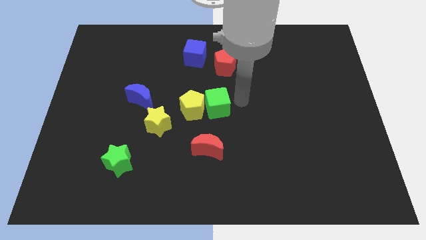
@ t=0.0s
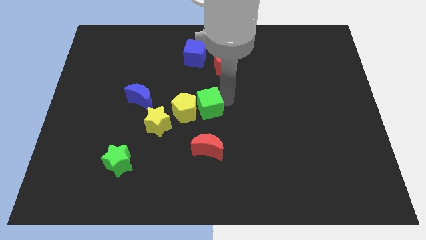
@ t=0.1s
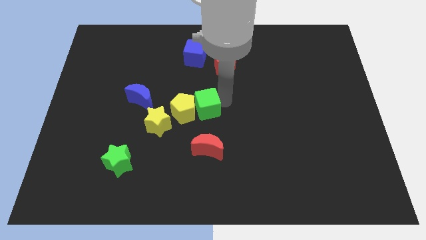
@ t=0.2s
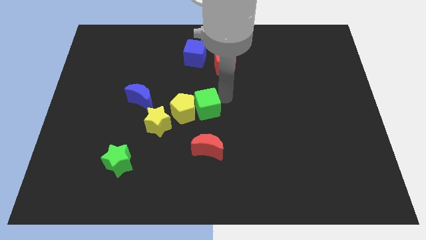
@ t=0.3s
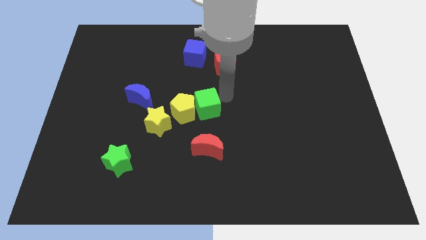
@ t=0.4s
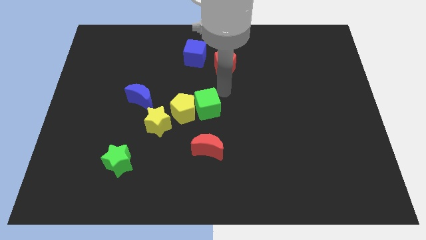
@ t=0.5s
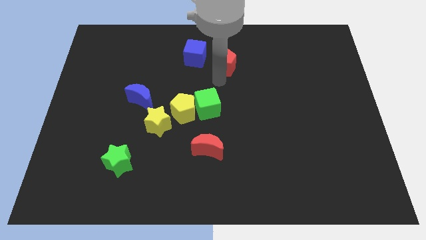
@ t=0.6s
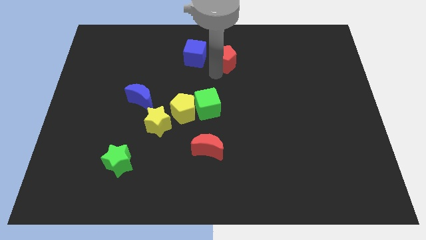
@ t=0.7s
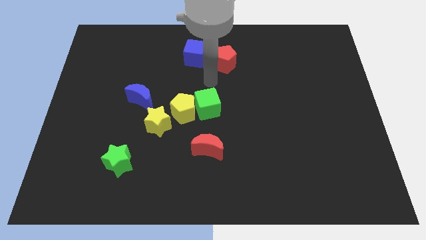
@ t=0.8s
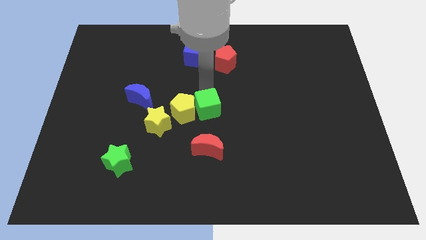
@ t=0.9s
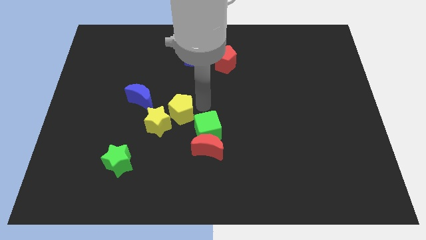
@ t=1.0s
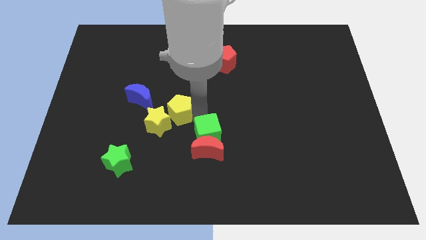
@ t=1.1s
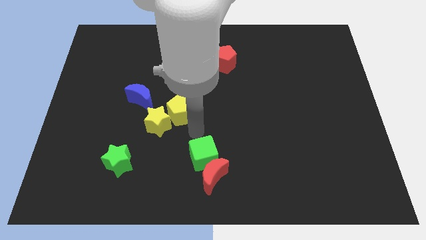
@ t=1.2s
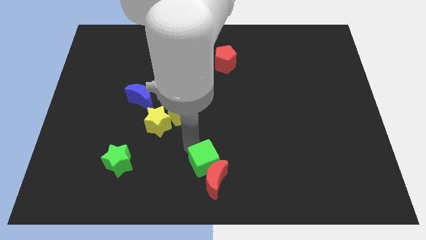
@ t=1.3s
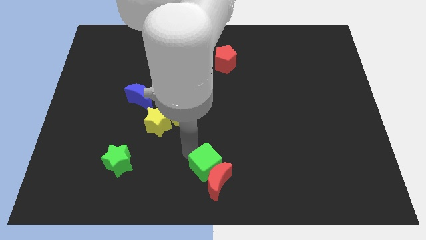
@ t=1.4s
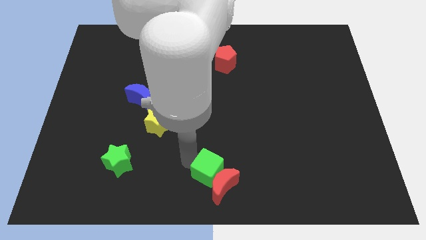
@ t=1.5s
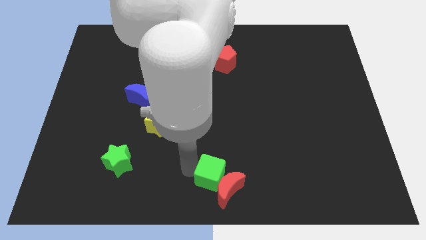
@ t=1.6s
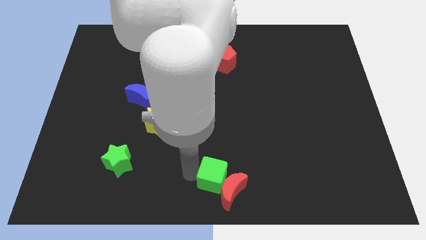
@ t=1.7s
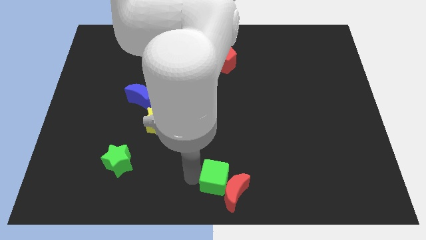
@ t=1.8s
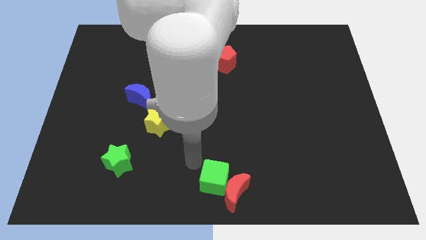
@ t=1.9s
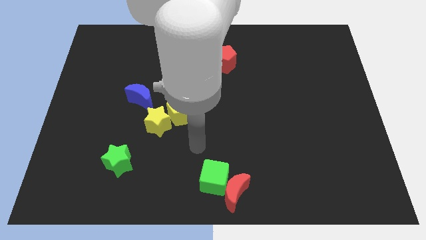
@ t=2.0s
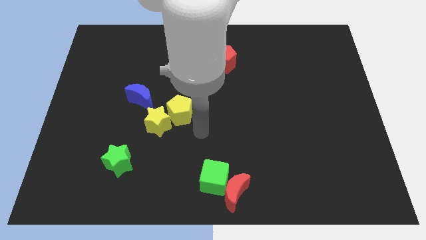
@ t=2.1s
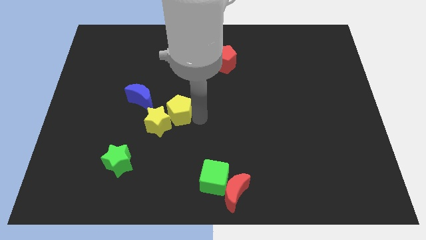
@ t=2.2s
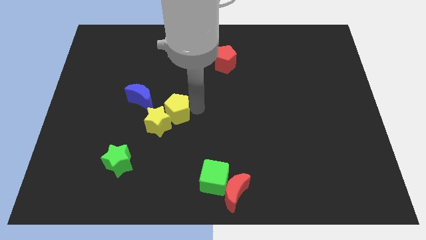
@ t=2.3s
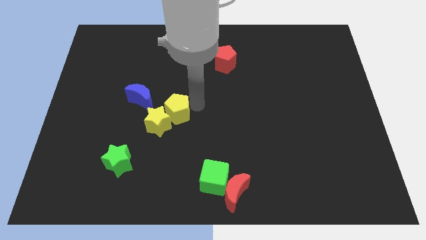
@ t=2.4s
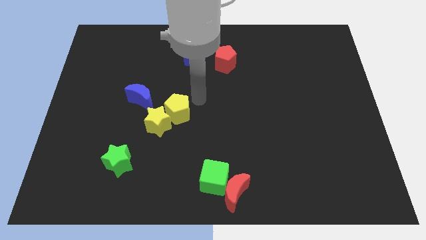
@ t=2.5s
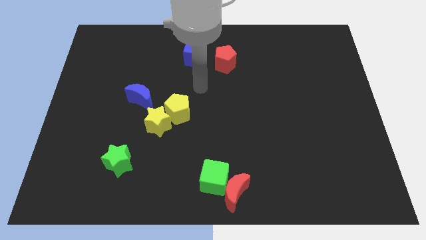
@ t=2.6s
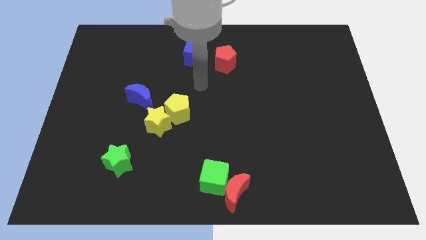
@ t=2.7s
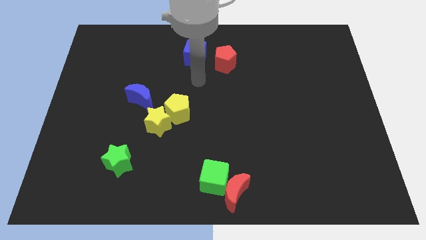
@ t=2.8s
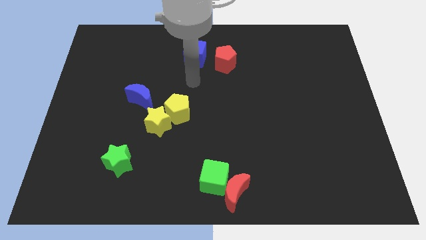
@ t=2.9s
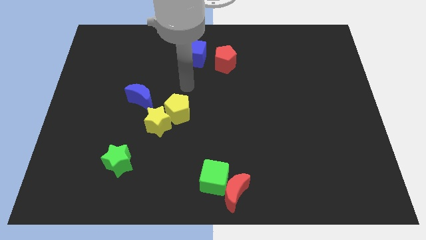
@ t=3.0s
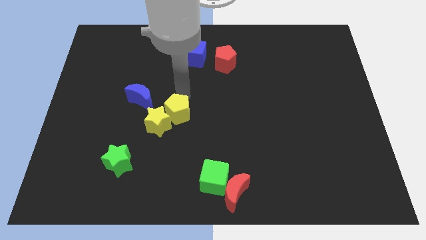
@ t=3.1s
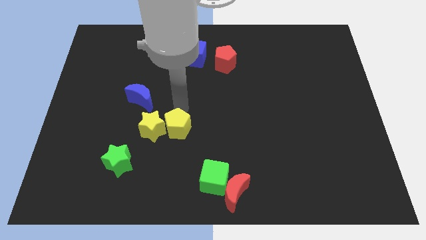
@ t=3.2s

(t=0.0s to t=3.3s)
push green cube to bottom center of the board

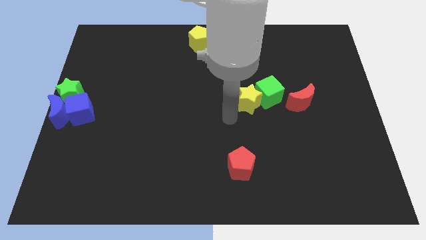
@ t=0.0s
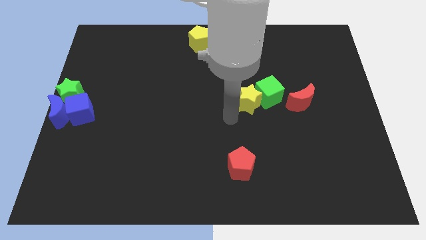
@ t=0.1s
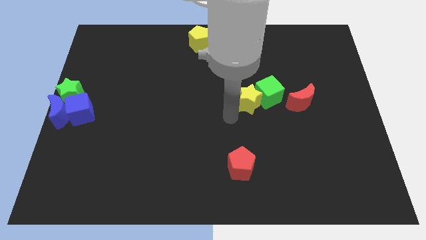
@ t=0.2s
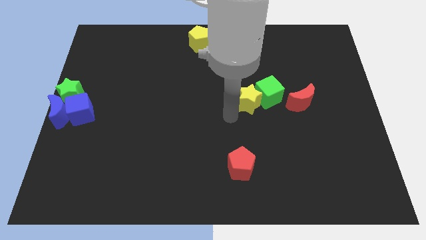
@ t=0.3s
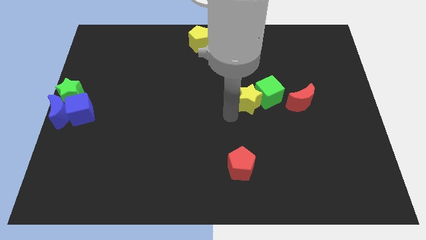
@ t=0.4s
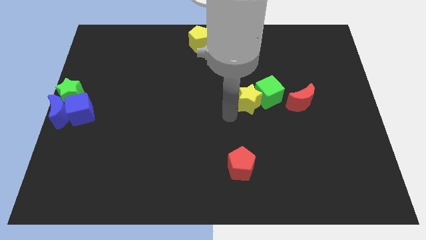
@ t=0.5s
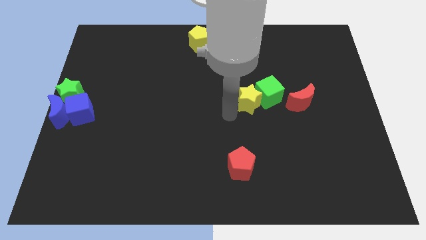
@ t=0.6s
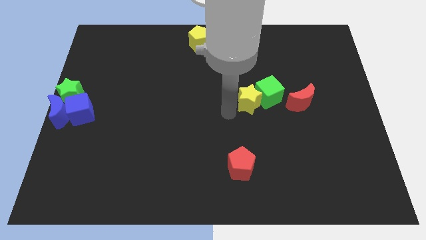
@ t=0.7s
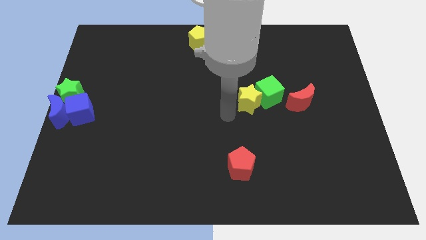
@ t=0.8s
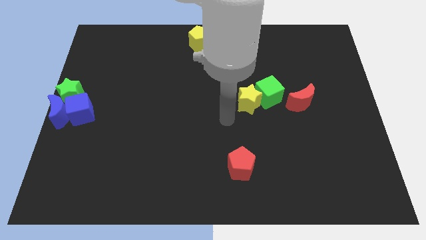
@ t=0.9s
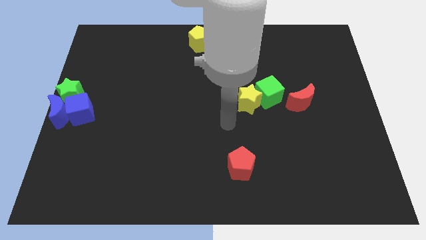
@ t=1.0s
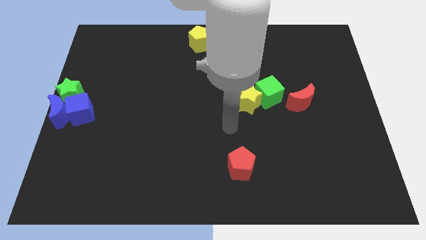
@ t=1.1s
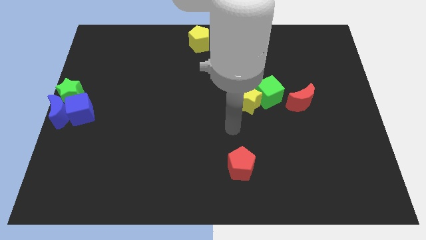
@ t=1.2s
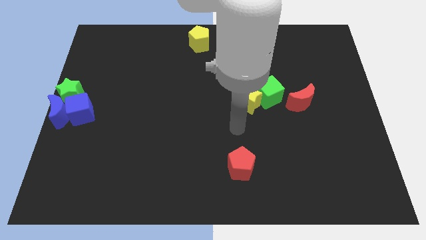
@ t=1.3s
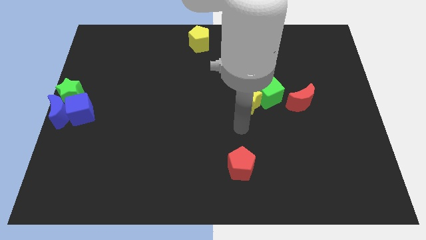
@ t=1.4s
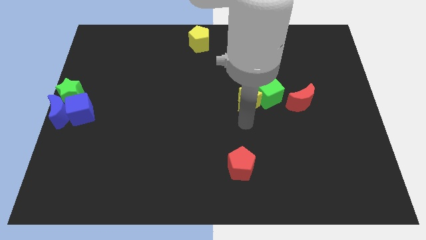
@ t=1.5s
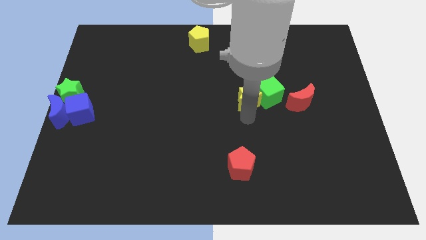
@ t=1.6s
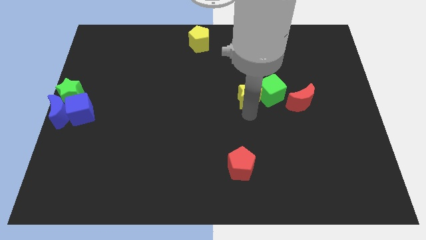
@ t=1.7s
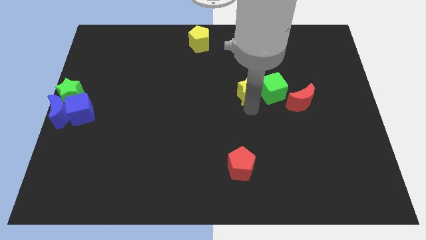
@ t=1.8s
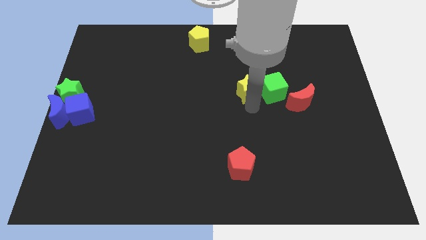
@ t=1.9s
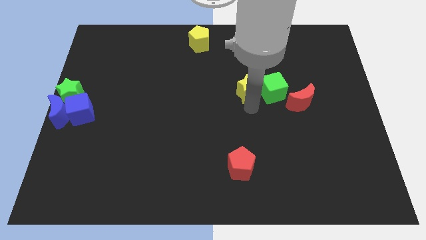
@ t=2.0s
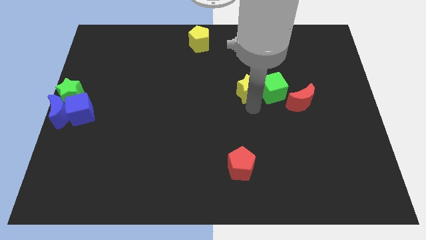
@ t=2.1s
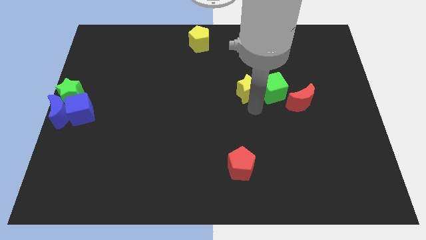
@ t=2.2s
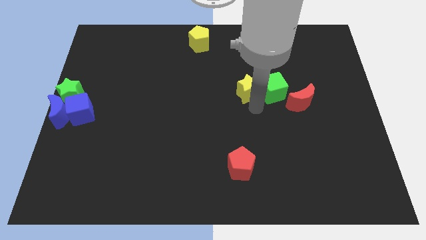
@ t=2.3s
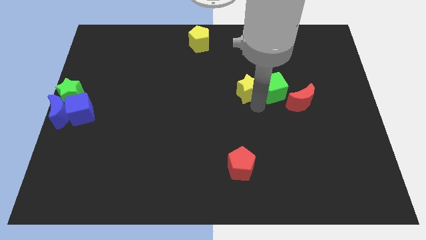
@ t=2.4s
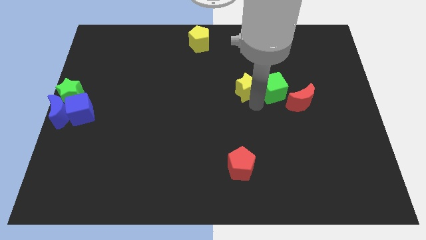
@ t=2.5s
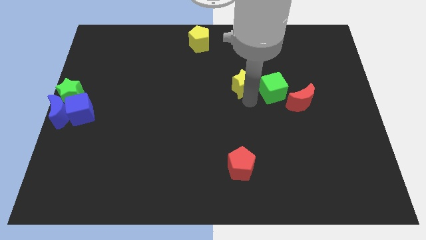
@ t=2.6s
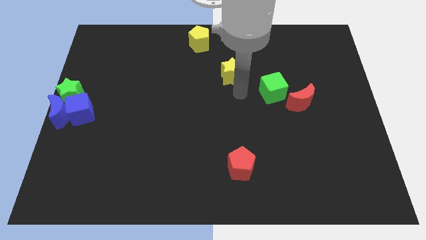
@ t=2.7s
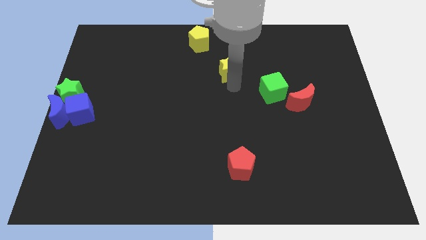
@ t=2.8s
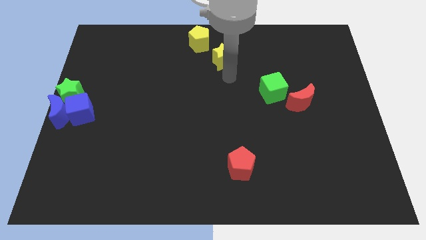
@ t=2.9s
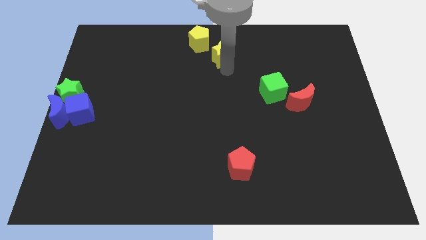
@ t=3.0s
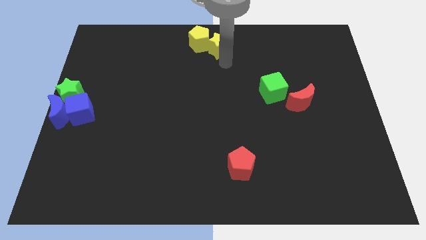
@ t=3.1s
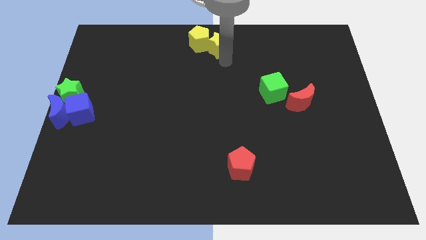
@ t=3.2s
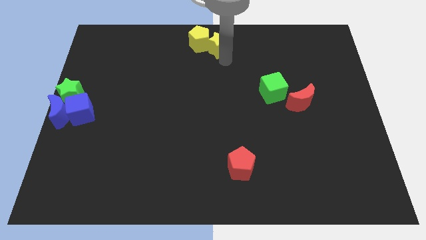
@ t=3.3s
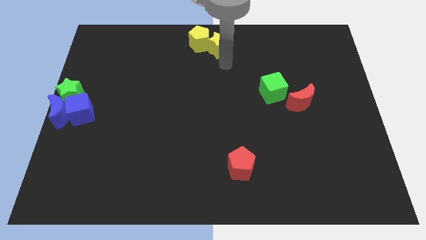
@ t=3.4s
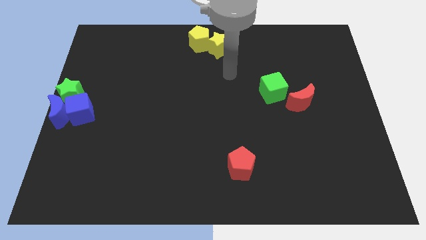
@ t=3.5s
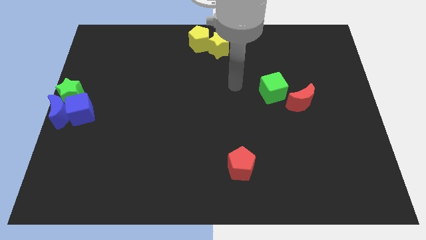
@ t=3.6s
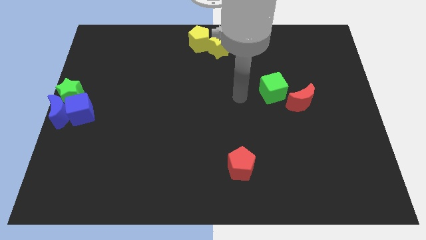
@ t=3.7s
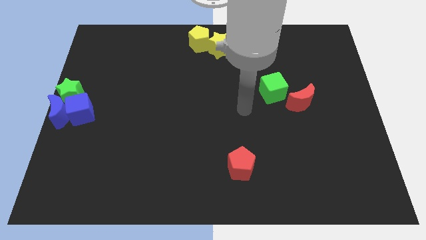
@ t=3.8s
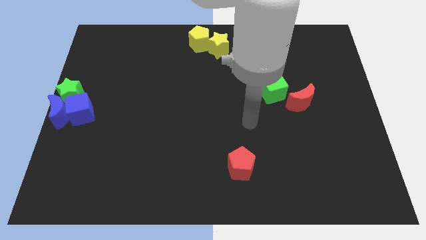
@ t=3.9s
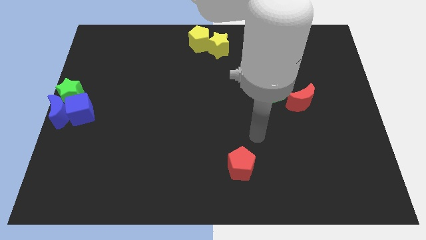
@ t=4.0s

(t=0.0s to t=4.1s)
slide yellow star into yellow pentagon

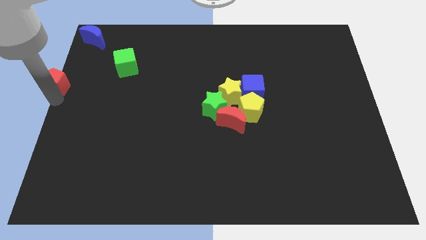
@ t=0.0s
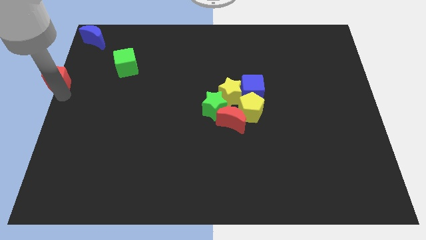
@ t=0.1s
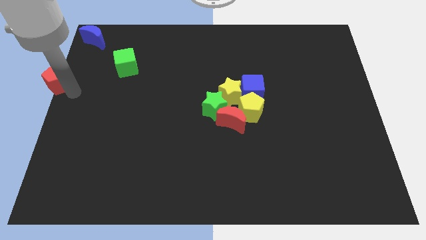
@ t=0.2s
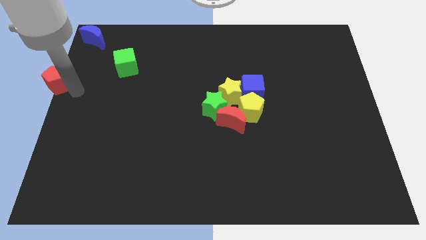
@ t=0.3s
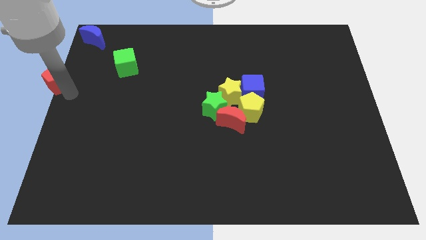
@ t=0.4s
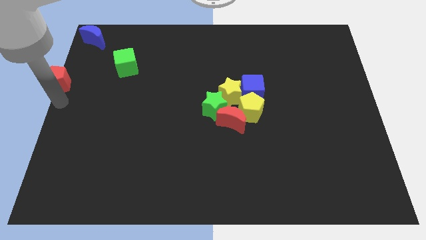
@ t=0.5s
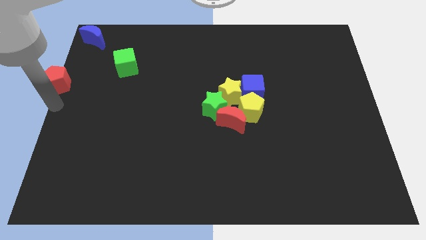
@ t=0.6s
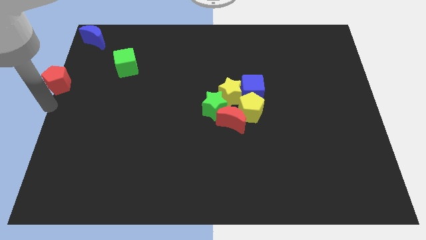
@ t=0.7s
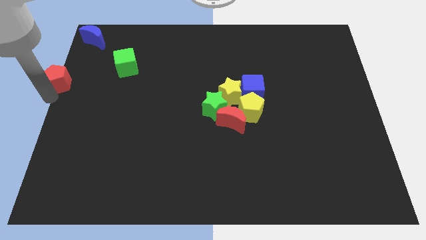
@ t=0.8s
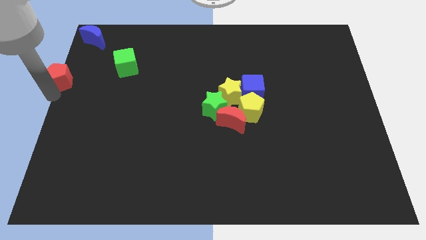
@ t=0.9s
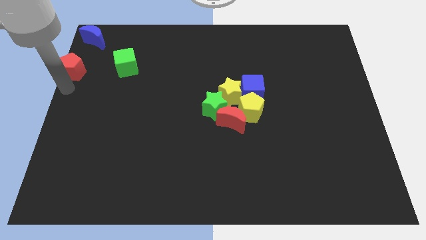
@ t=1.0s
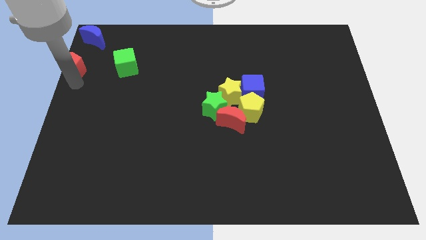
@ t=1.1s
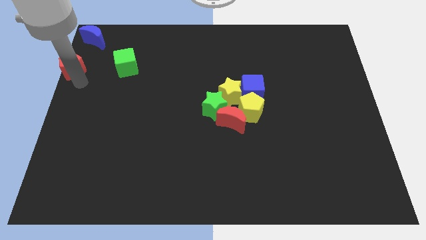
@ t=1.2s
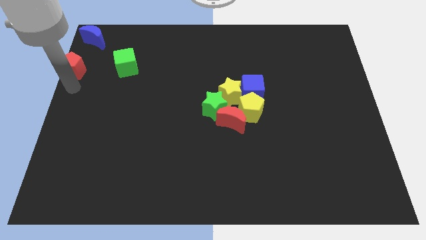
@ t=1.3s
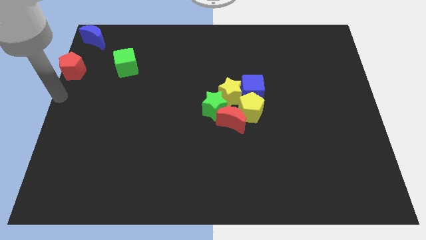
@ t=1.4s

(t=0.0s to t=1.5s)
push the red pentagon towards the left of the green cube
